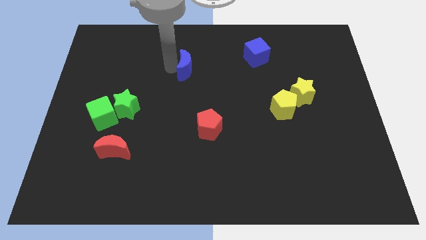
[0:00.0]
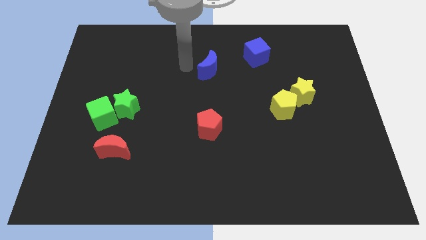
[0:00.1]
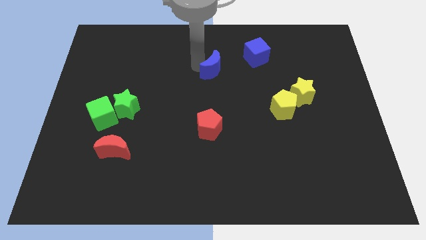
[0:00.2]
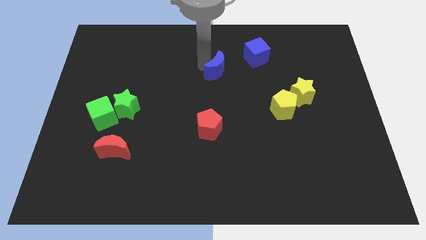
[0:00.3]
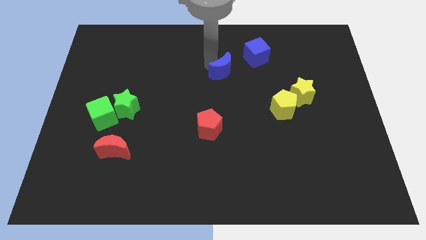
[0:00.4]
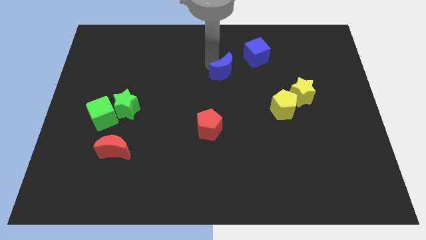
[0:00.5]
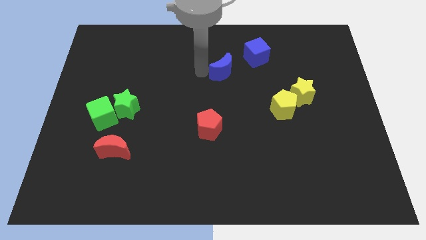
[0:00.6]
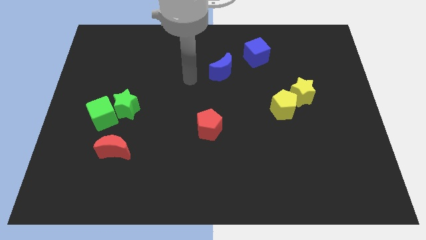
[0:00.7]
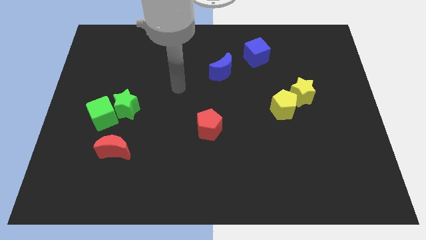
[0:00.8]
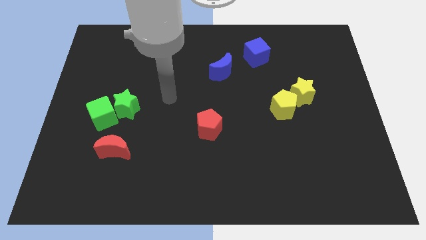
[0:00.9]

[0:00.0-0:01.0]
place the blue moon diagonally down left to the blue cube

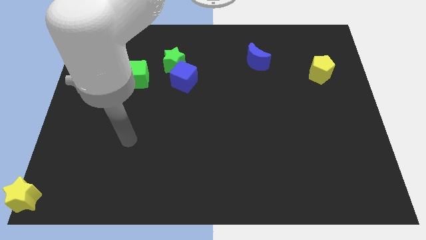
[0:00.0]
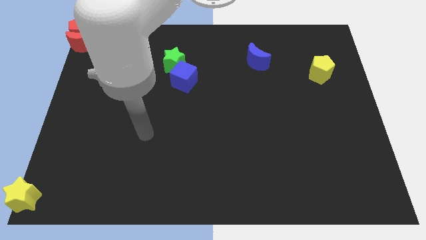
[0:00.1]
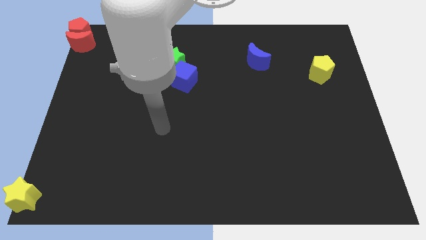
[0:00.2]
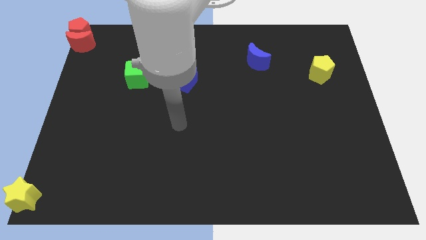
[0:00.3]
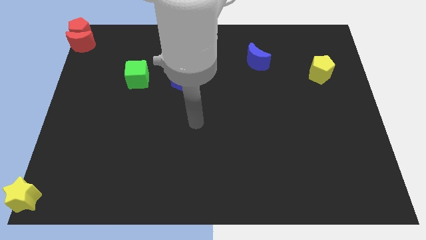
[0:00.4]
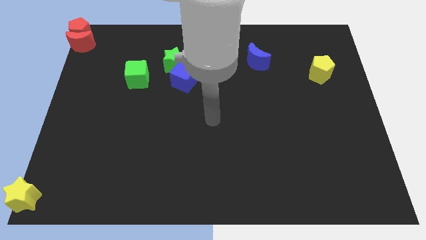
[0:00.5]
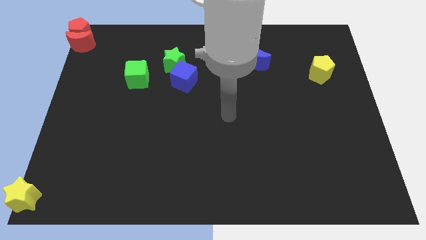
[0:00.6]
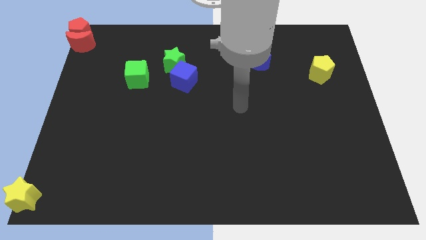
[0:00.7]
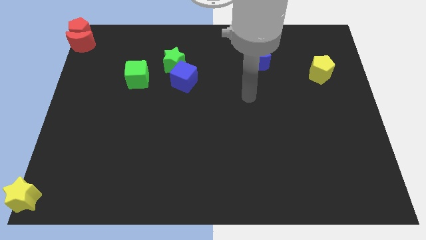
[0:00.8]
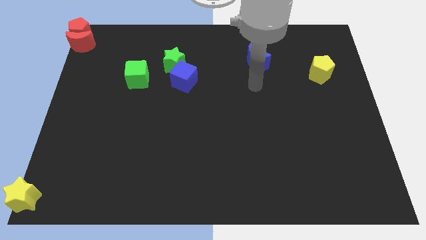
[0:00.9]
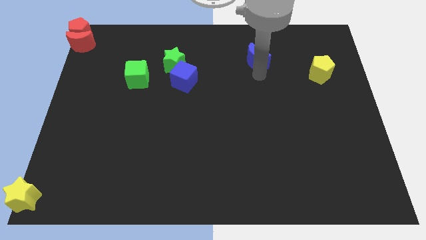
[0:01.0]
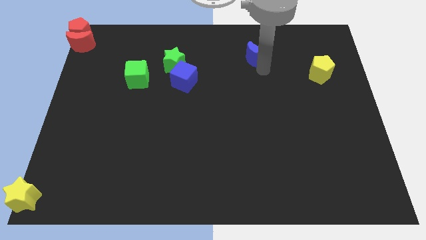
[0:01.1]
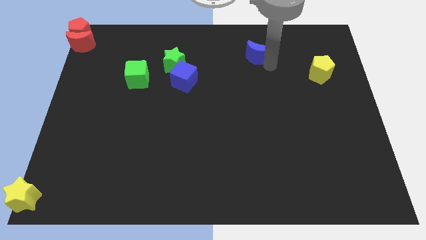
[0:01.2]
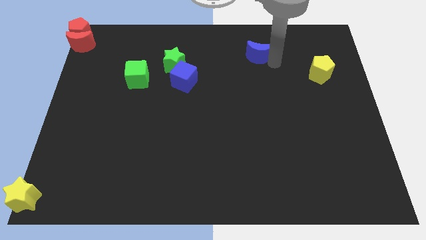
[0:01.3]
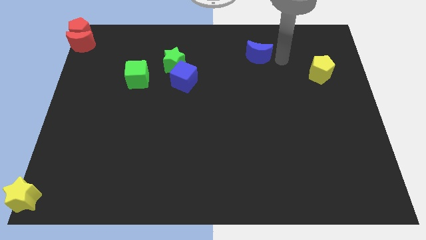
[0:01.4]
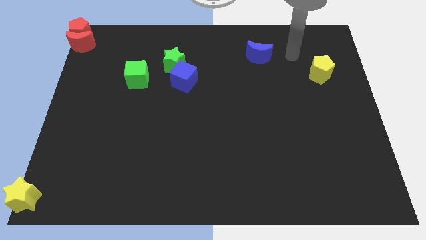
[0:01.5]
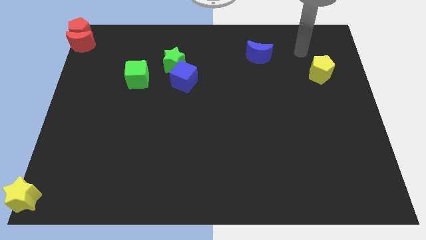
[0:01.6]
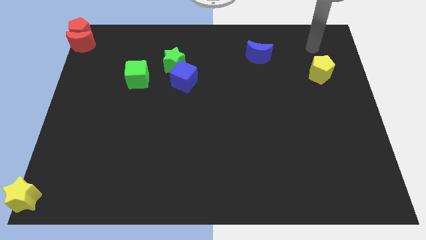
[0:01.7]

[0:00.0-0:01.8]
push the blue moon upwards slightly

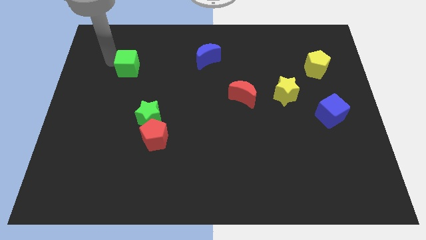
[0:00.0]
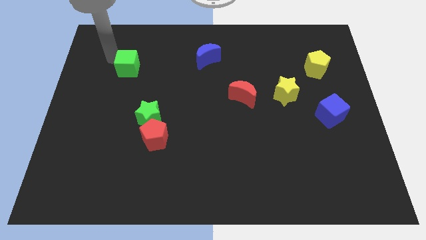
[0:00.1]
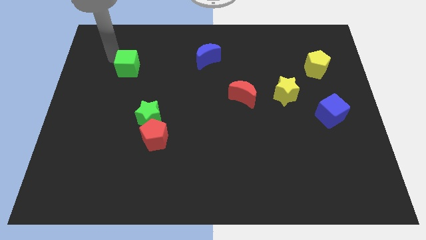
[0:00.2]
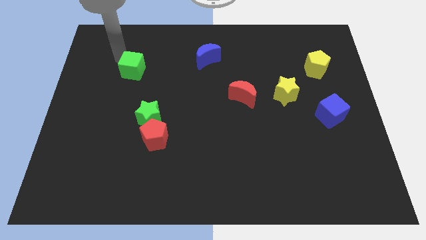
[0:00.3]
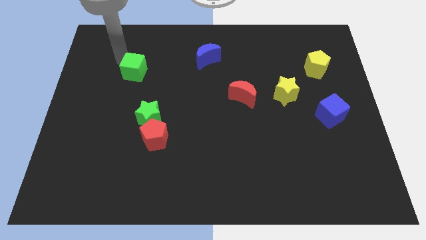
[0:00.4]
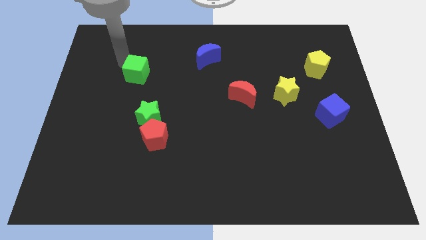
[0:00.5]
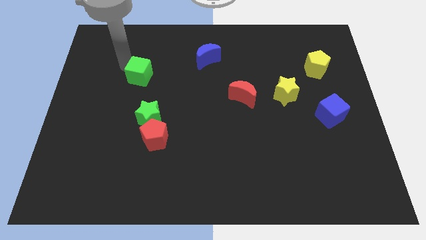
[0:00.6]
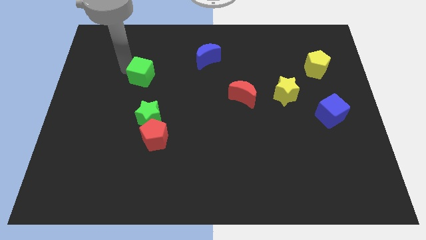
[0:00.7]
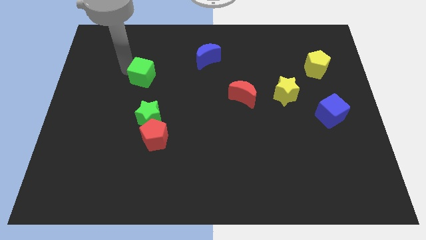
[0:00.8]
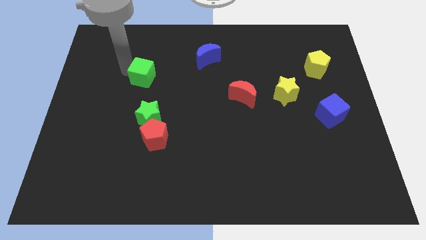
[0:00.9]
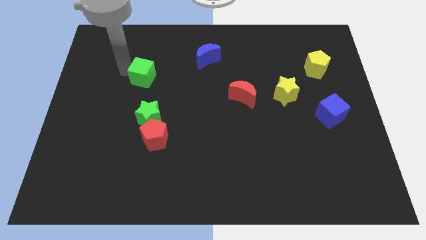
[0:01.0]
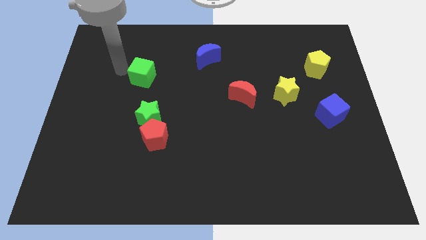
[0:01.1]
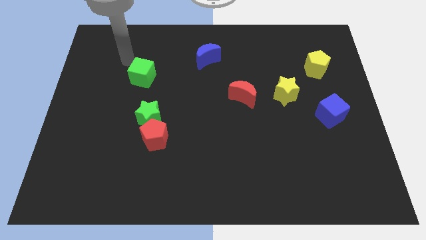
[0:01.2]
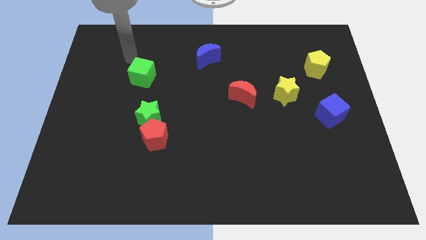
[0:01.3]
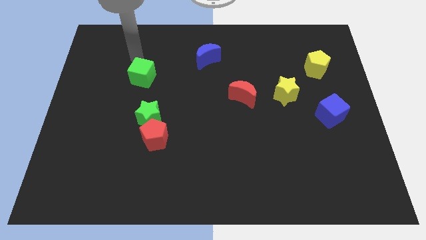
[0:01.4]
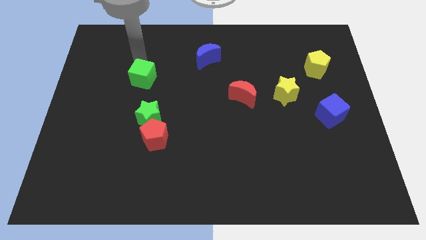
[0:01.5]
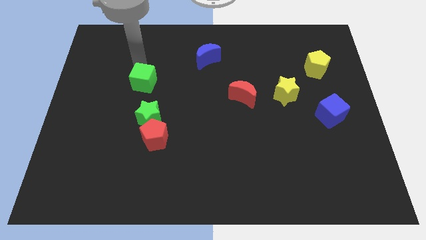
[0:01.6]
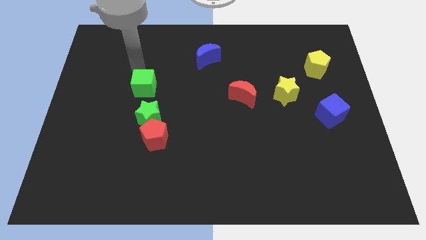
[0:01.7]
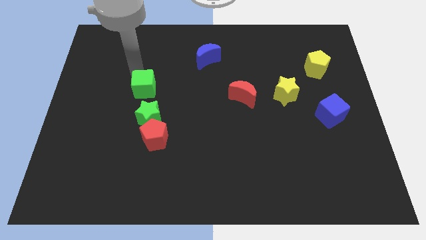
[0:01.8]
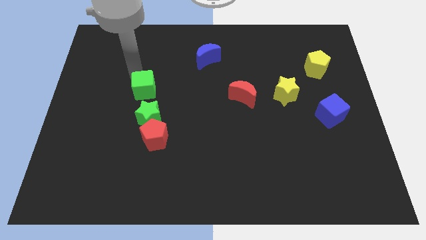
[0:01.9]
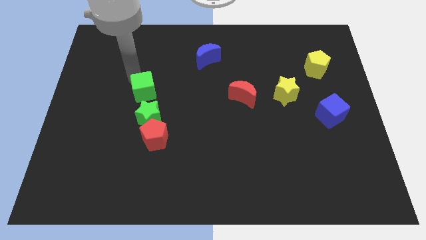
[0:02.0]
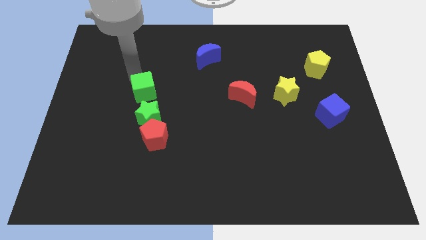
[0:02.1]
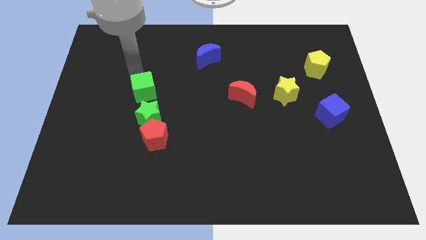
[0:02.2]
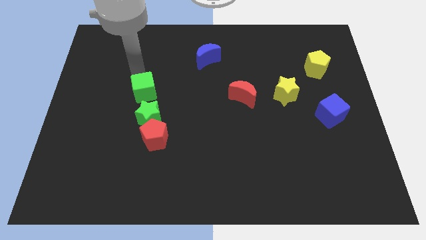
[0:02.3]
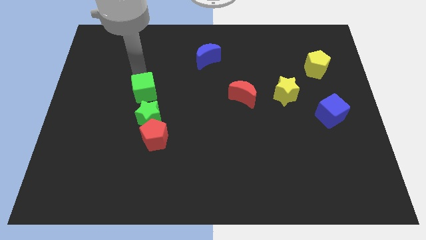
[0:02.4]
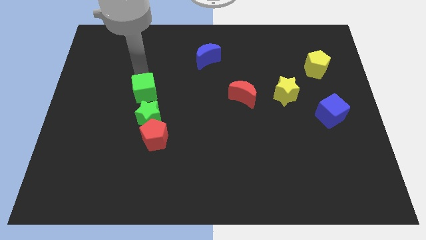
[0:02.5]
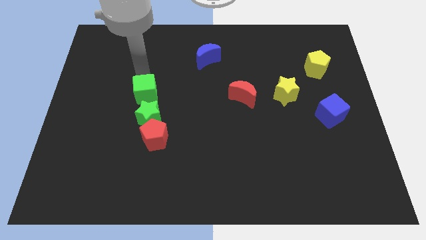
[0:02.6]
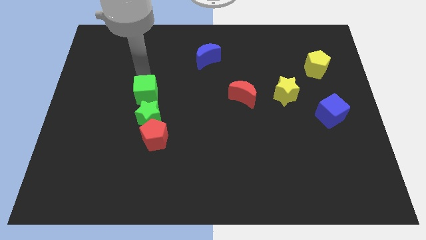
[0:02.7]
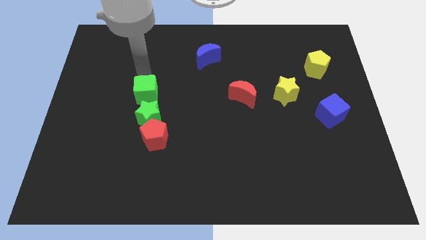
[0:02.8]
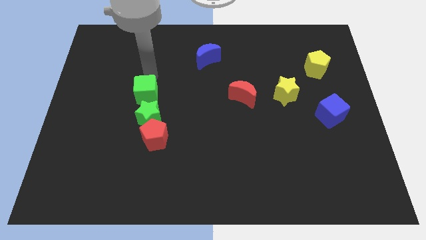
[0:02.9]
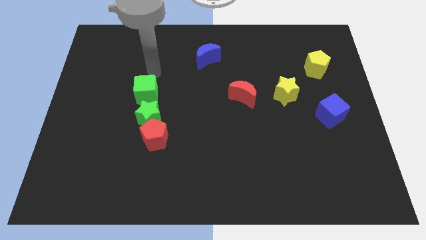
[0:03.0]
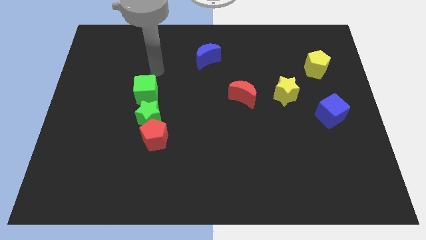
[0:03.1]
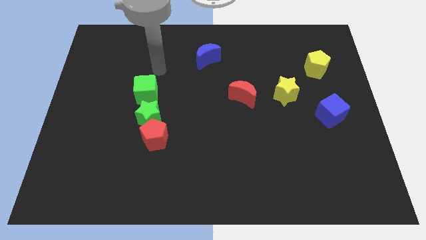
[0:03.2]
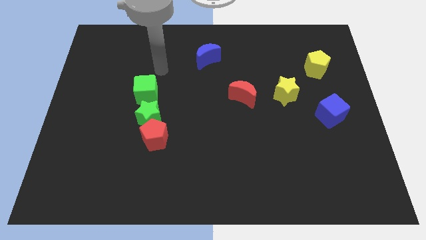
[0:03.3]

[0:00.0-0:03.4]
move the green cube to the top of the green star

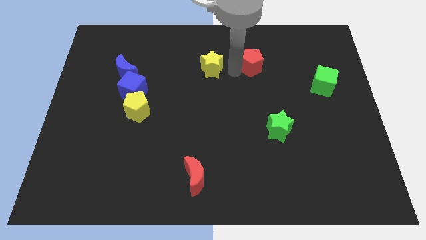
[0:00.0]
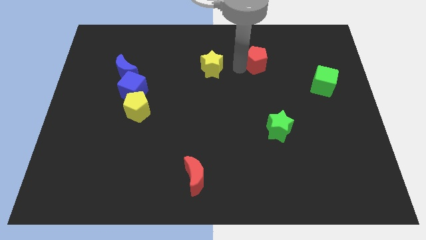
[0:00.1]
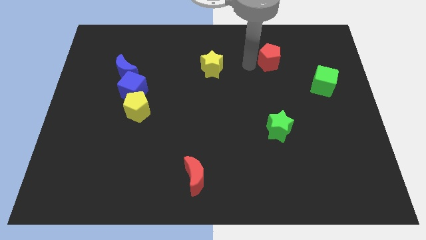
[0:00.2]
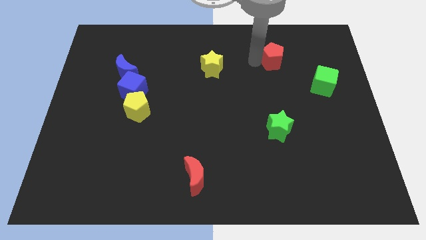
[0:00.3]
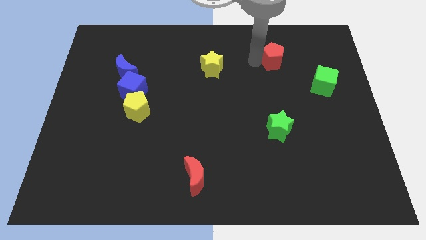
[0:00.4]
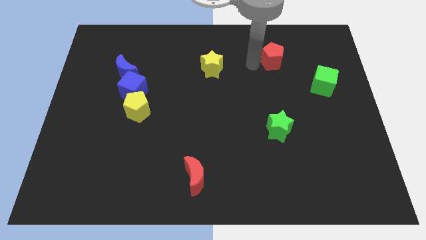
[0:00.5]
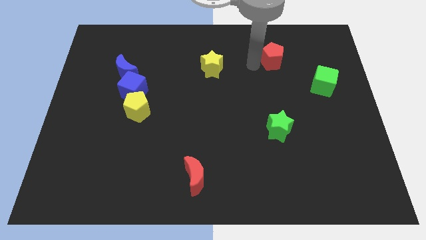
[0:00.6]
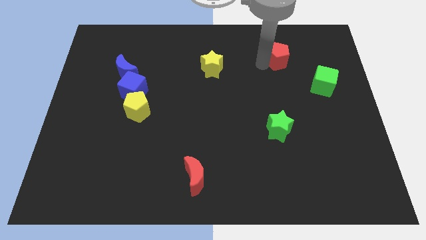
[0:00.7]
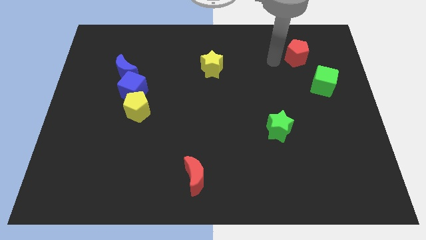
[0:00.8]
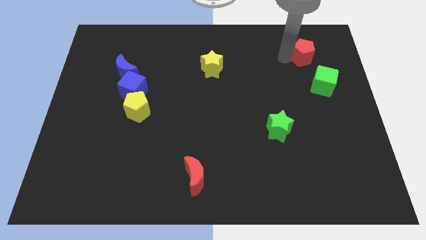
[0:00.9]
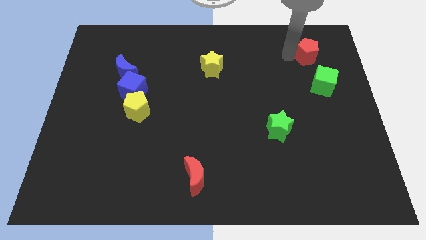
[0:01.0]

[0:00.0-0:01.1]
push the red pentagon to the right side of the board

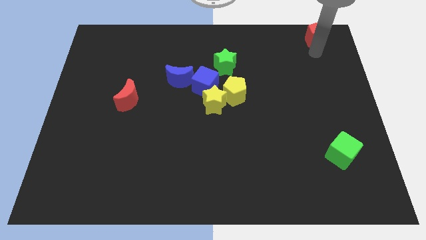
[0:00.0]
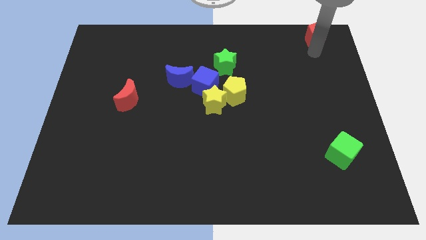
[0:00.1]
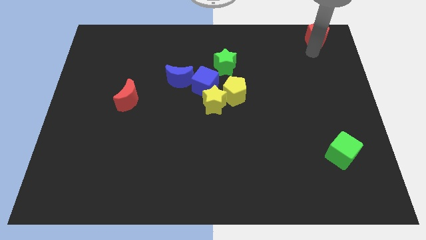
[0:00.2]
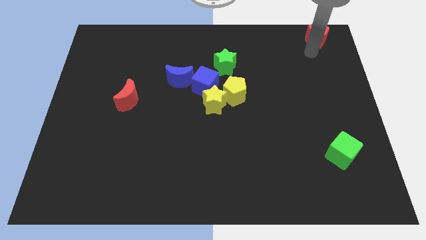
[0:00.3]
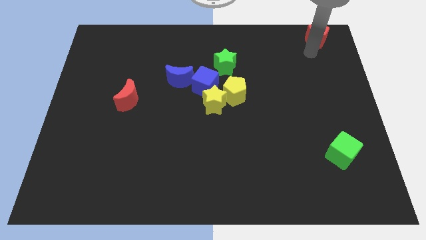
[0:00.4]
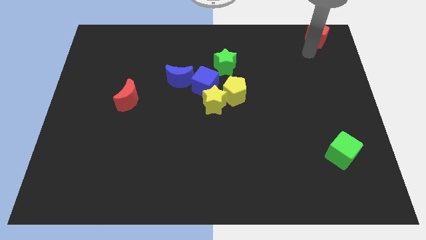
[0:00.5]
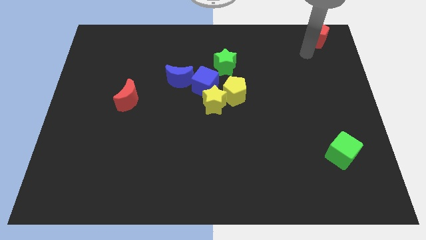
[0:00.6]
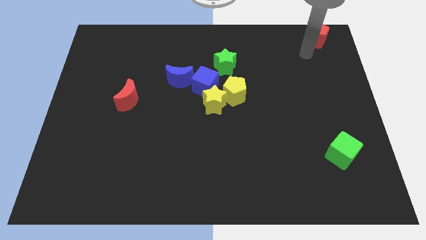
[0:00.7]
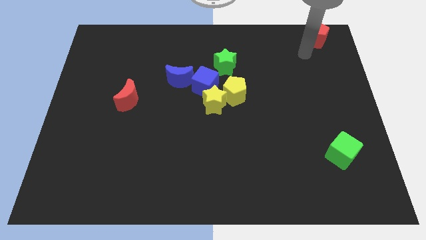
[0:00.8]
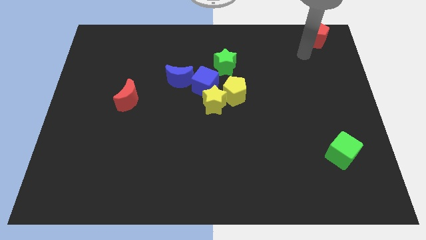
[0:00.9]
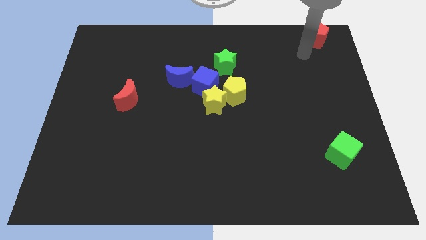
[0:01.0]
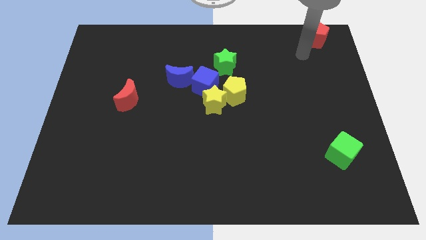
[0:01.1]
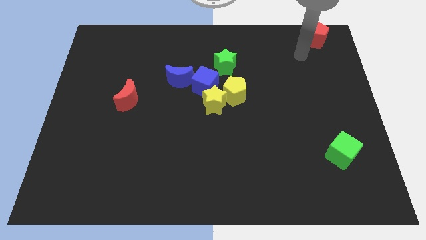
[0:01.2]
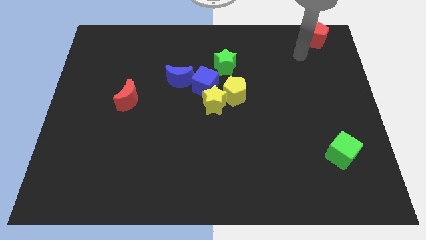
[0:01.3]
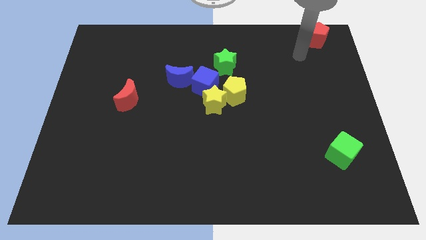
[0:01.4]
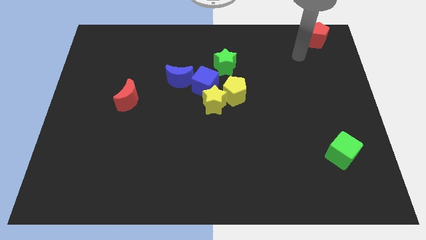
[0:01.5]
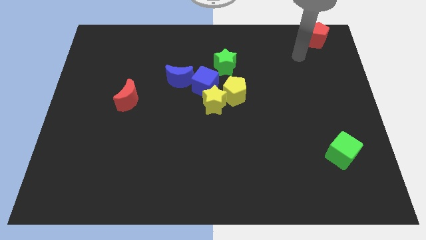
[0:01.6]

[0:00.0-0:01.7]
move the arm away from the red pentagon
